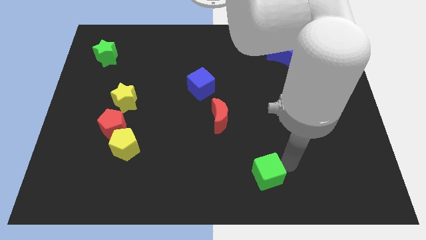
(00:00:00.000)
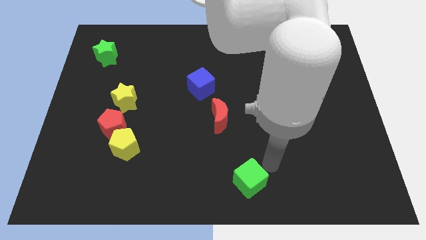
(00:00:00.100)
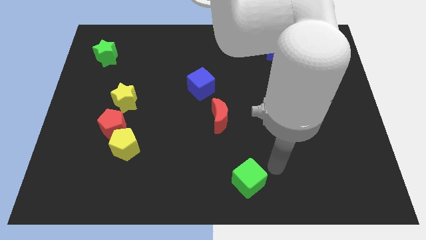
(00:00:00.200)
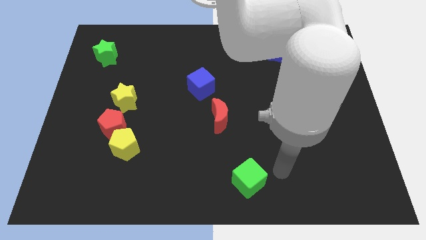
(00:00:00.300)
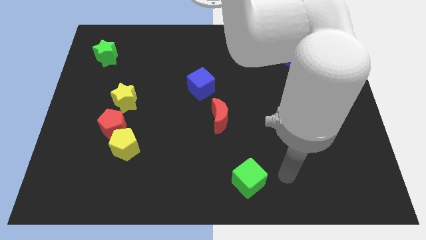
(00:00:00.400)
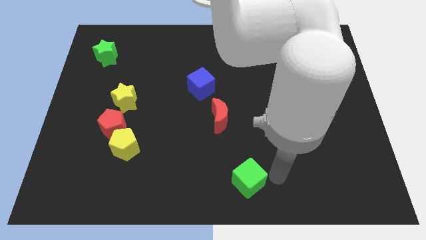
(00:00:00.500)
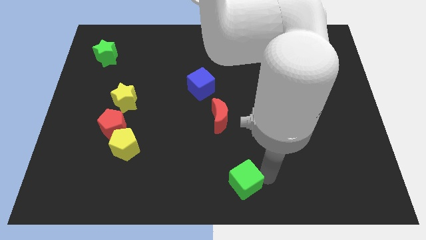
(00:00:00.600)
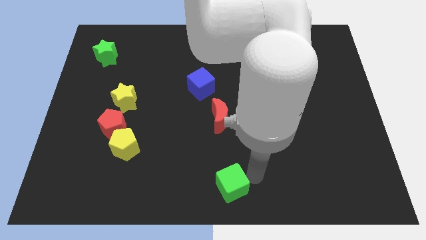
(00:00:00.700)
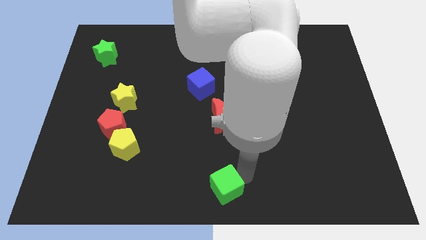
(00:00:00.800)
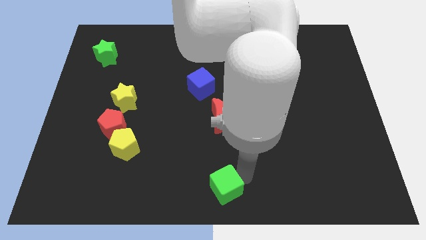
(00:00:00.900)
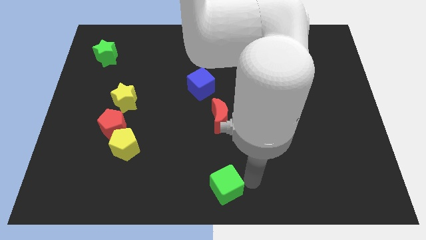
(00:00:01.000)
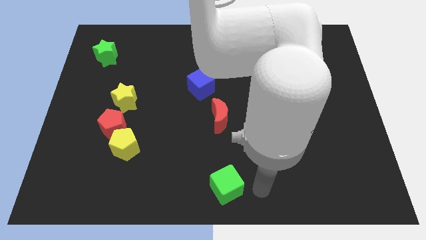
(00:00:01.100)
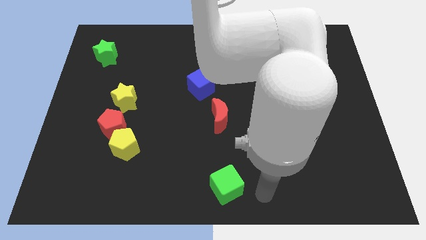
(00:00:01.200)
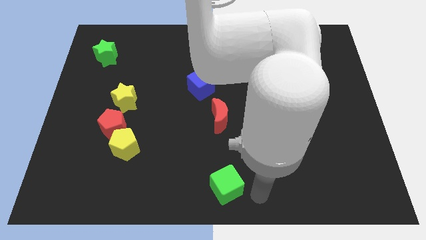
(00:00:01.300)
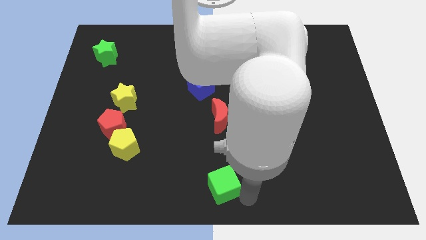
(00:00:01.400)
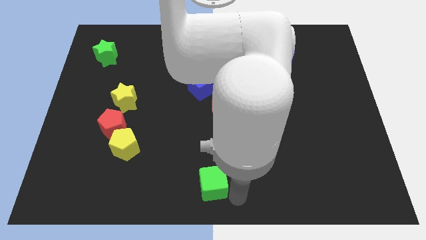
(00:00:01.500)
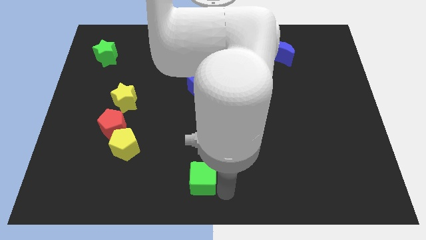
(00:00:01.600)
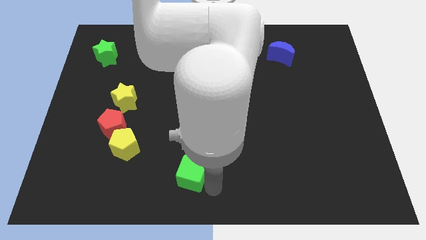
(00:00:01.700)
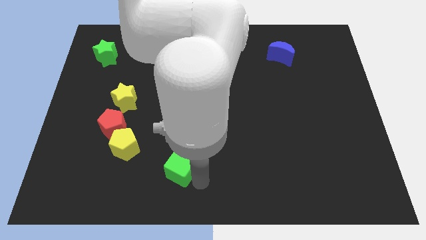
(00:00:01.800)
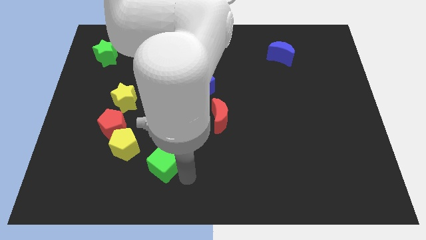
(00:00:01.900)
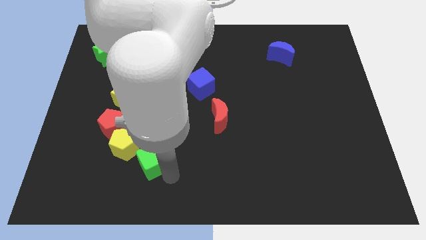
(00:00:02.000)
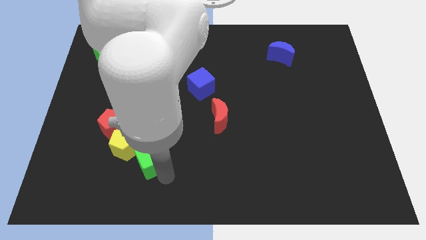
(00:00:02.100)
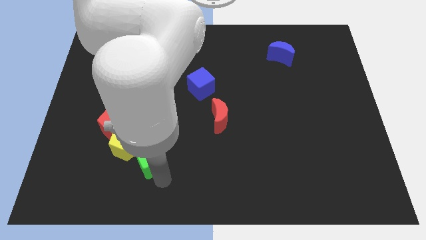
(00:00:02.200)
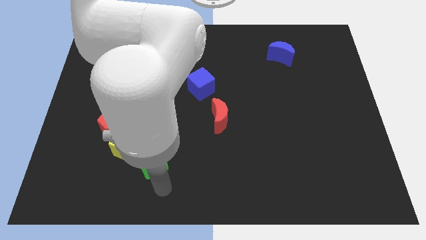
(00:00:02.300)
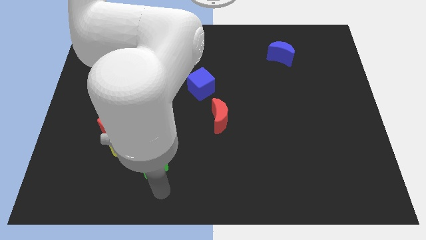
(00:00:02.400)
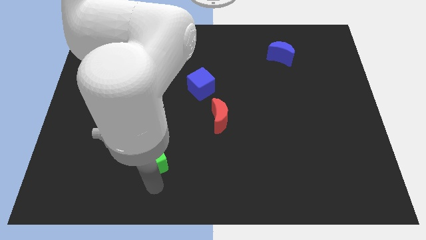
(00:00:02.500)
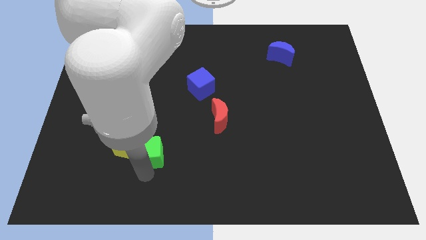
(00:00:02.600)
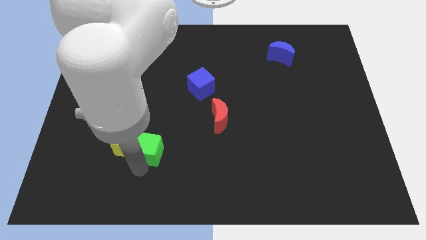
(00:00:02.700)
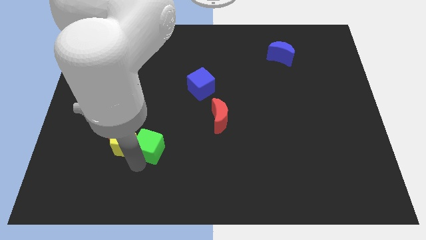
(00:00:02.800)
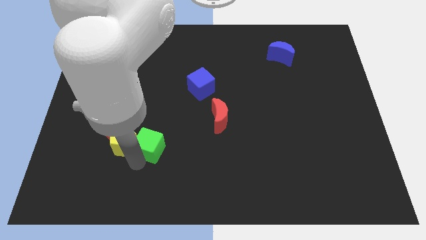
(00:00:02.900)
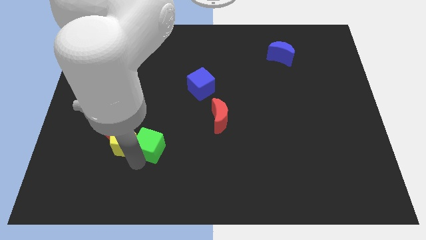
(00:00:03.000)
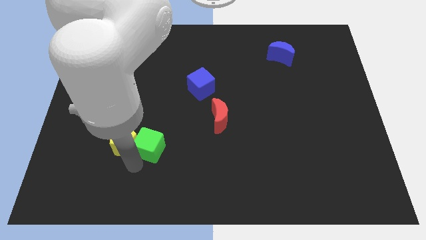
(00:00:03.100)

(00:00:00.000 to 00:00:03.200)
move green cube near yellow pentagon

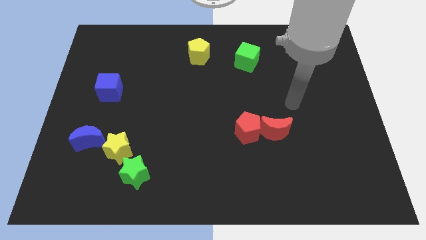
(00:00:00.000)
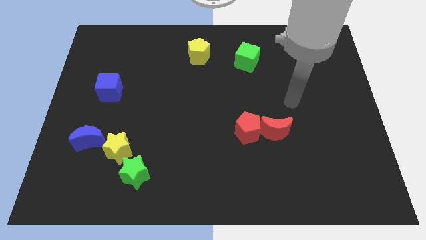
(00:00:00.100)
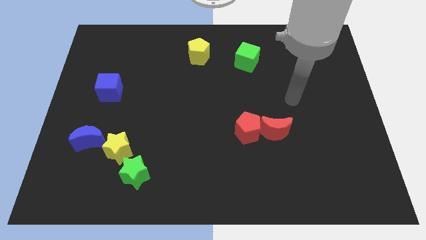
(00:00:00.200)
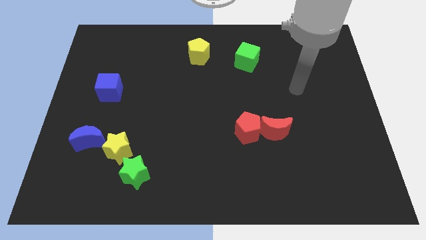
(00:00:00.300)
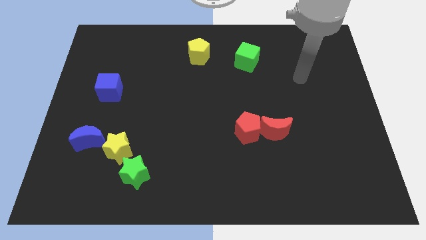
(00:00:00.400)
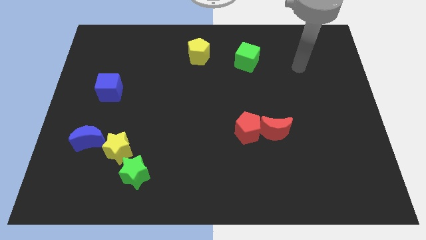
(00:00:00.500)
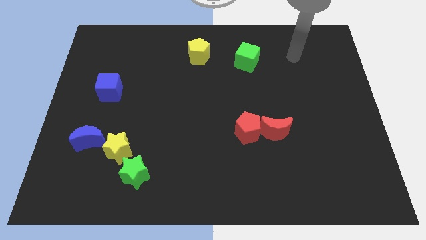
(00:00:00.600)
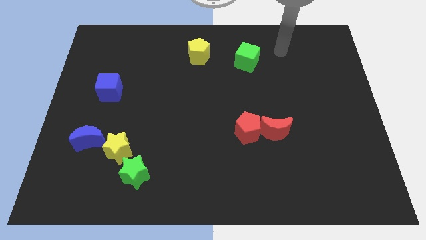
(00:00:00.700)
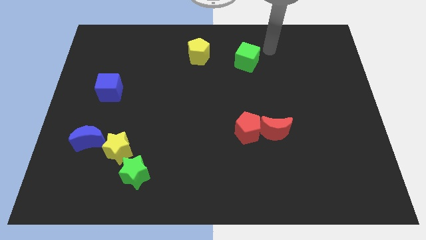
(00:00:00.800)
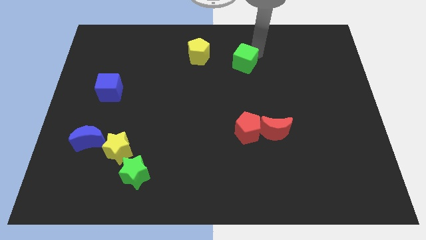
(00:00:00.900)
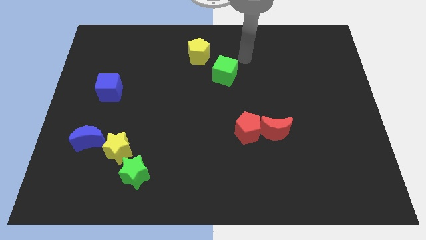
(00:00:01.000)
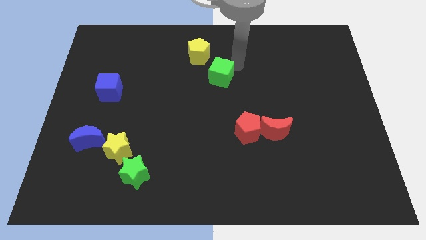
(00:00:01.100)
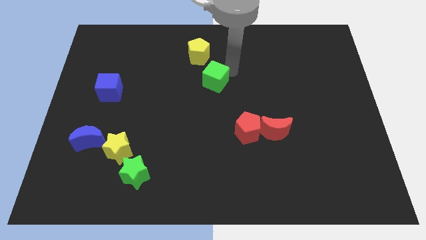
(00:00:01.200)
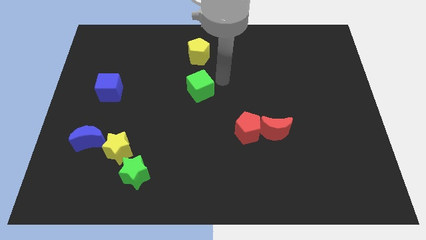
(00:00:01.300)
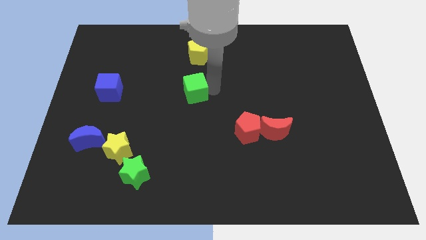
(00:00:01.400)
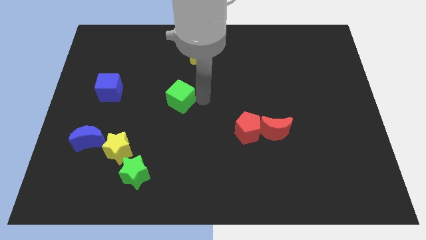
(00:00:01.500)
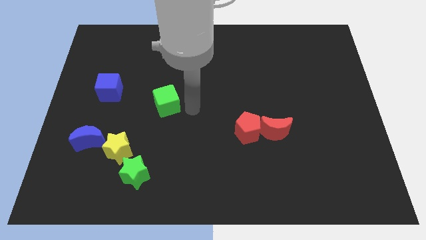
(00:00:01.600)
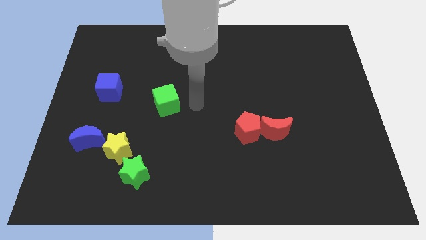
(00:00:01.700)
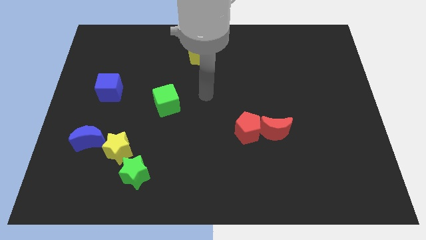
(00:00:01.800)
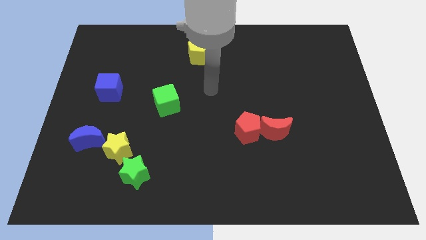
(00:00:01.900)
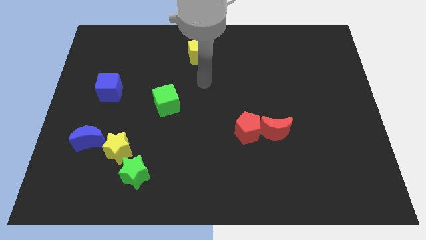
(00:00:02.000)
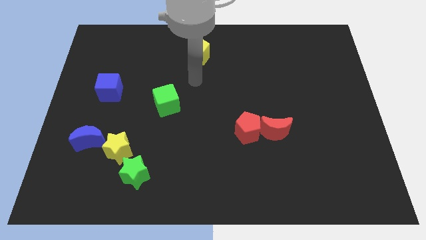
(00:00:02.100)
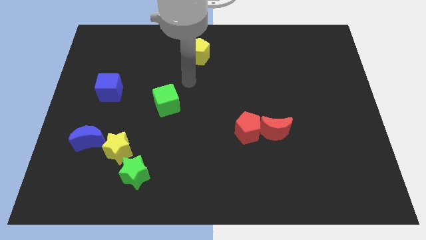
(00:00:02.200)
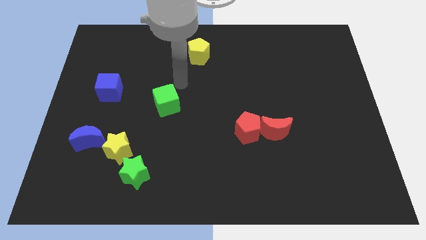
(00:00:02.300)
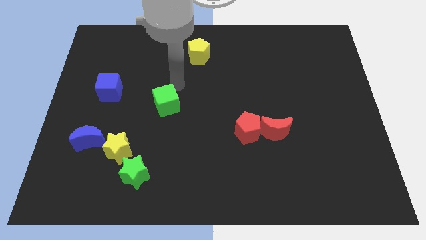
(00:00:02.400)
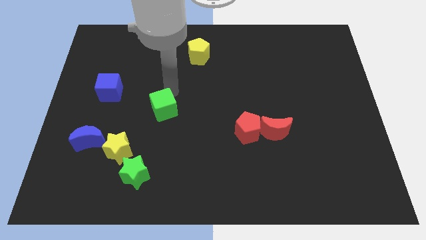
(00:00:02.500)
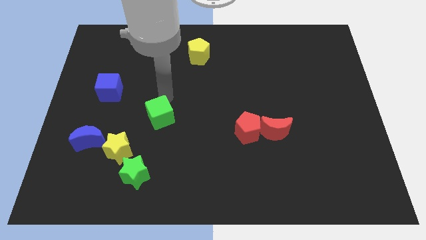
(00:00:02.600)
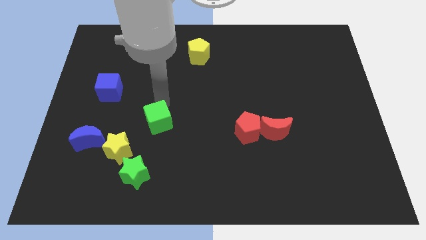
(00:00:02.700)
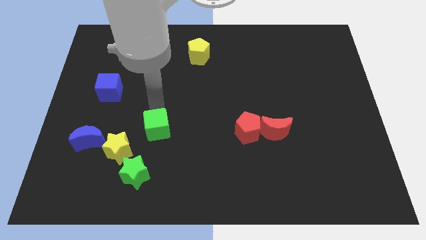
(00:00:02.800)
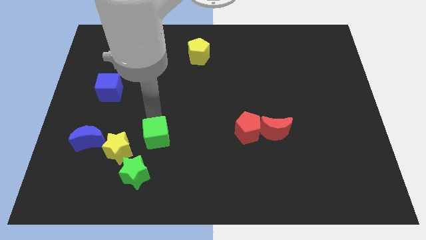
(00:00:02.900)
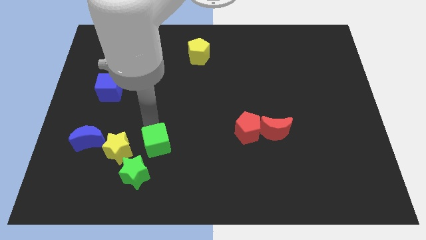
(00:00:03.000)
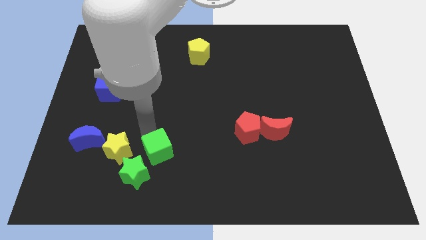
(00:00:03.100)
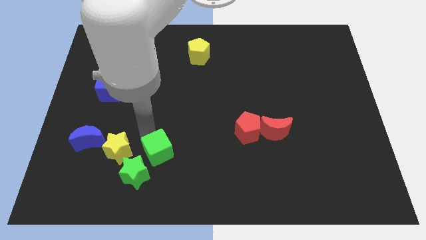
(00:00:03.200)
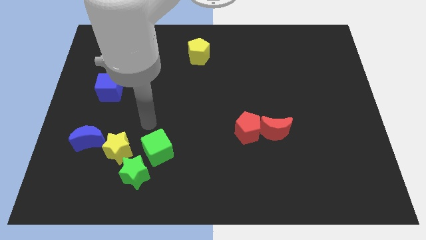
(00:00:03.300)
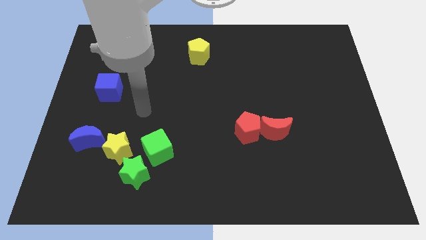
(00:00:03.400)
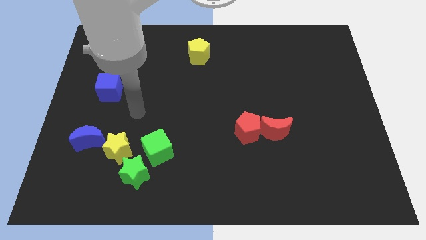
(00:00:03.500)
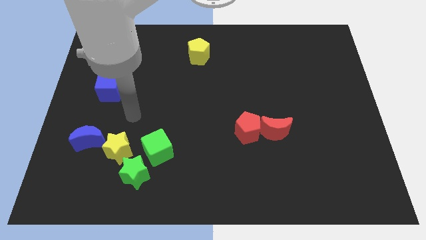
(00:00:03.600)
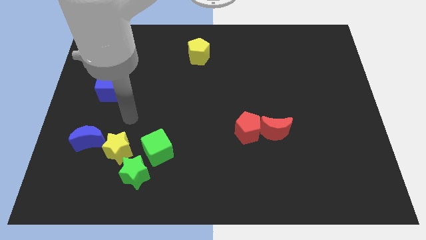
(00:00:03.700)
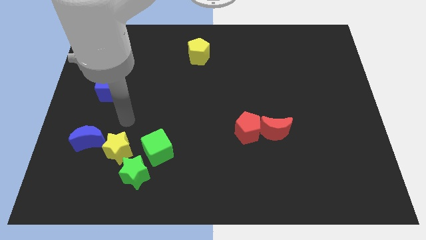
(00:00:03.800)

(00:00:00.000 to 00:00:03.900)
move the green cube close to the green star

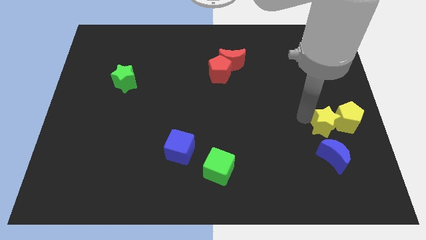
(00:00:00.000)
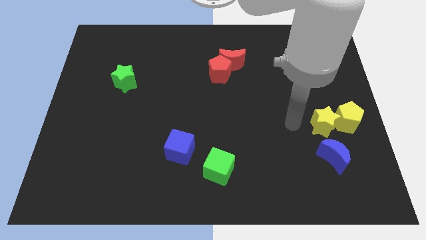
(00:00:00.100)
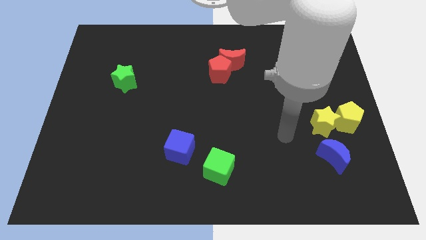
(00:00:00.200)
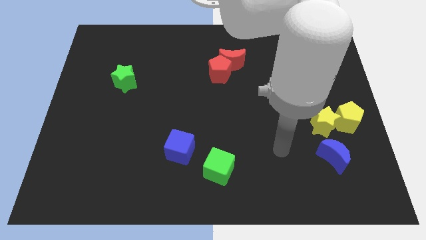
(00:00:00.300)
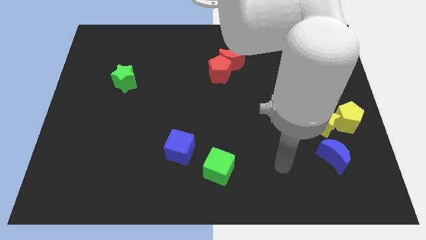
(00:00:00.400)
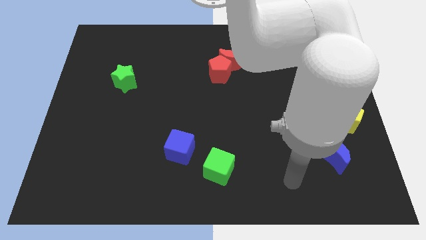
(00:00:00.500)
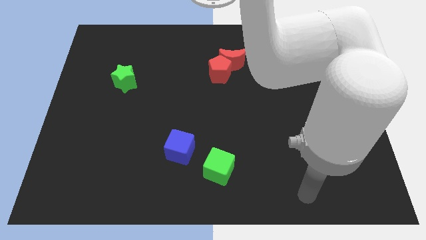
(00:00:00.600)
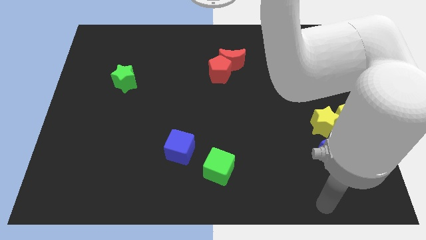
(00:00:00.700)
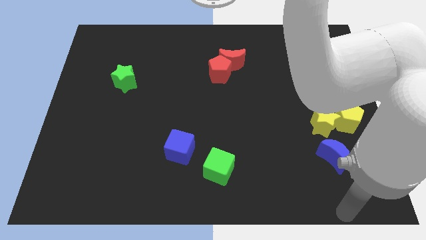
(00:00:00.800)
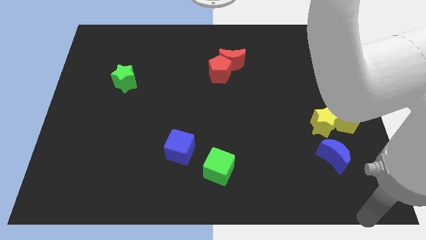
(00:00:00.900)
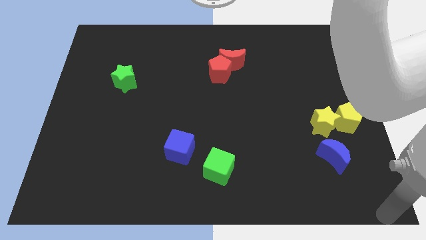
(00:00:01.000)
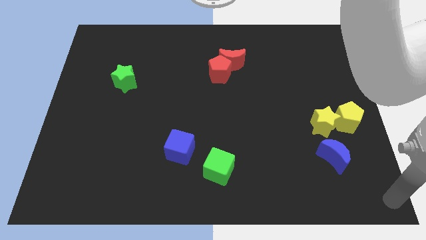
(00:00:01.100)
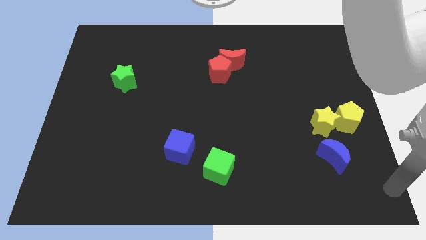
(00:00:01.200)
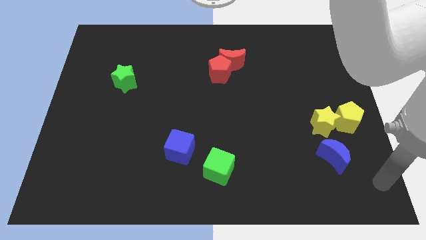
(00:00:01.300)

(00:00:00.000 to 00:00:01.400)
move your arm away from the yellow star

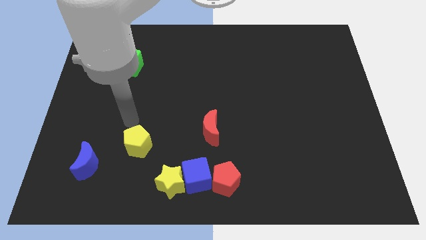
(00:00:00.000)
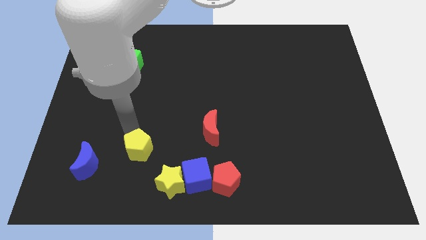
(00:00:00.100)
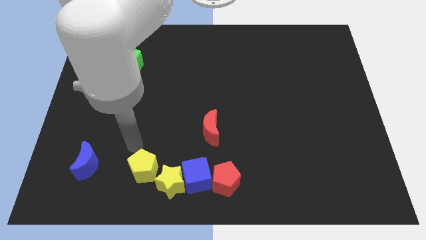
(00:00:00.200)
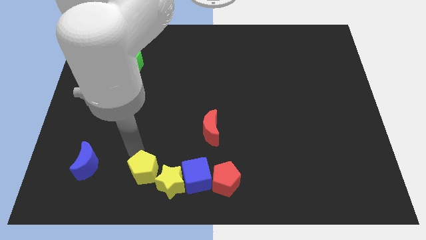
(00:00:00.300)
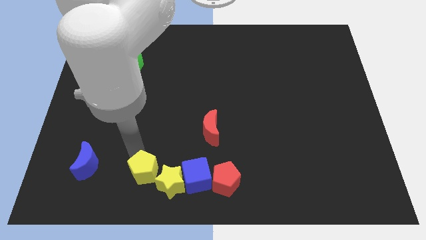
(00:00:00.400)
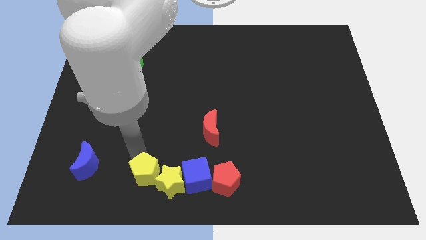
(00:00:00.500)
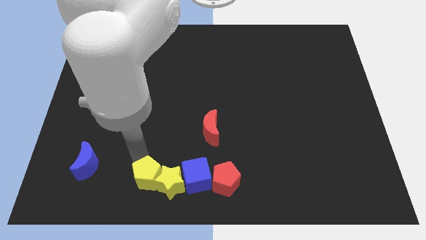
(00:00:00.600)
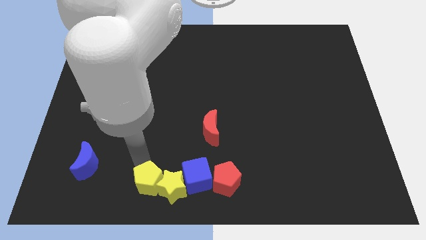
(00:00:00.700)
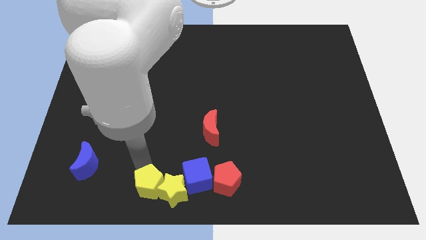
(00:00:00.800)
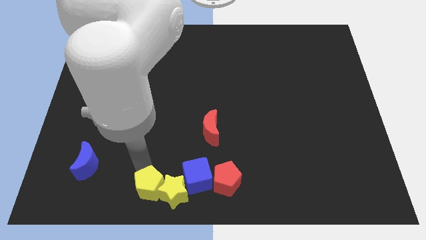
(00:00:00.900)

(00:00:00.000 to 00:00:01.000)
push the yellow pentagon into yellow star
